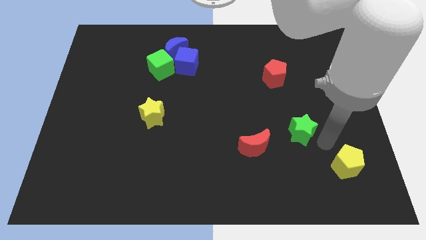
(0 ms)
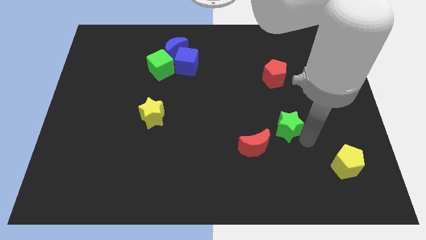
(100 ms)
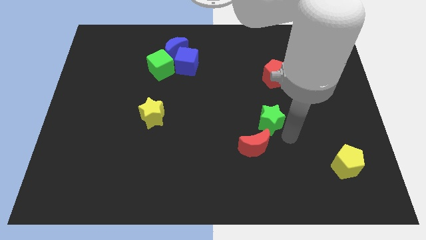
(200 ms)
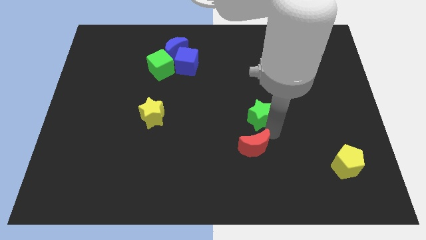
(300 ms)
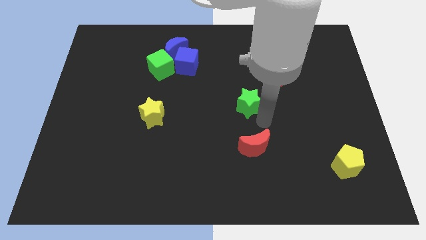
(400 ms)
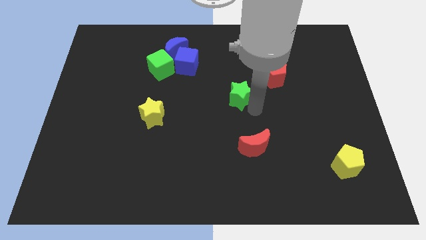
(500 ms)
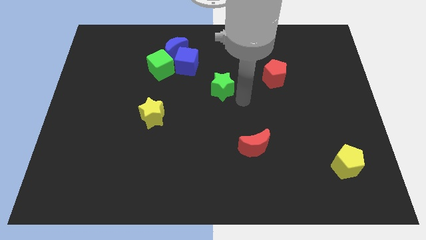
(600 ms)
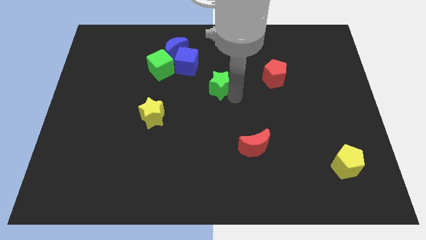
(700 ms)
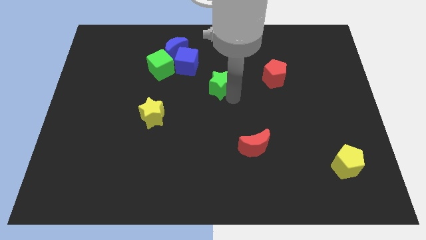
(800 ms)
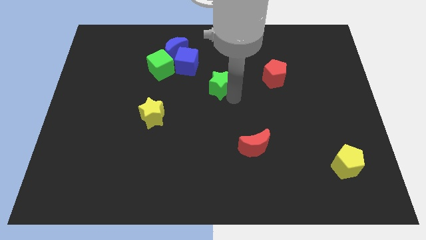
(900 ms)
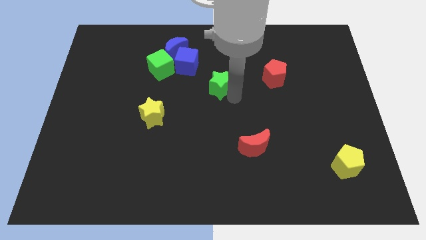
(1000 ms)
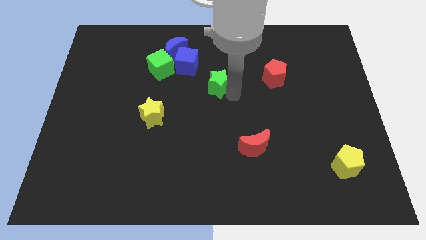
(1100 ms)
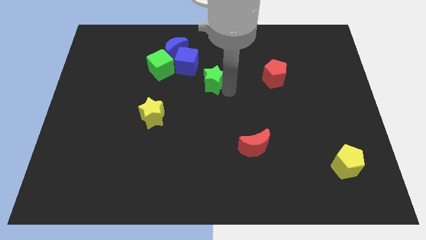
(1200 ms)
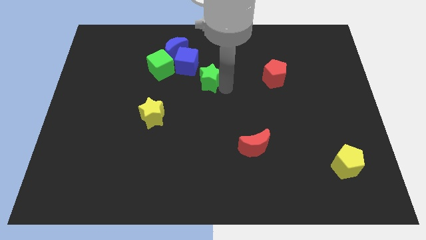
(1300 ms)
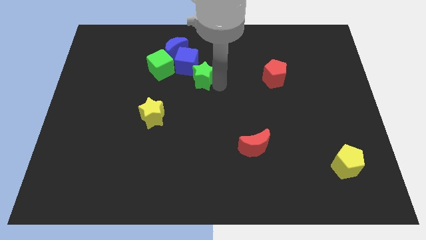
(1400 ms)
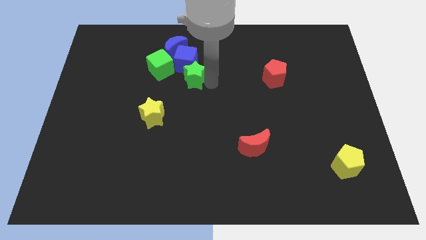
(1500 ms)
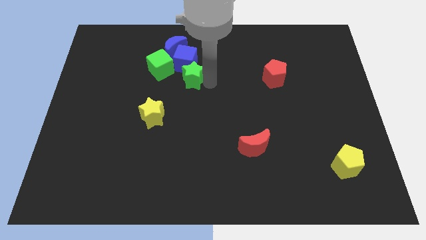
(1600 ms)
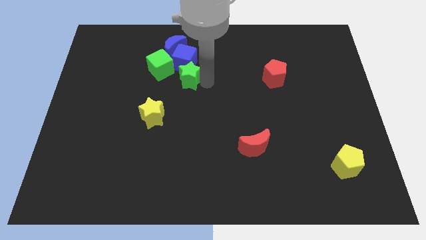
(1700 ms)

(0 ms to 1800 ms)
slide the green star towards the bottom side of the blue cube

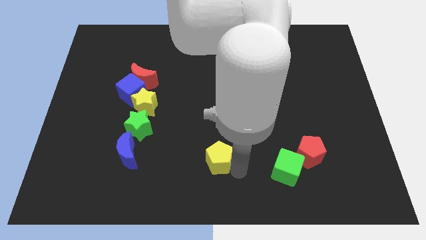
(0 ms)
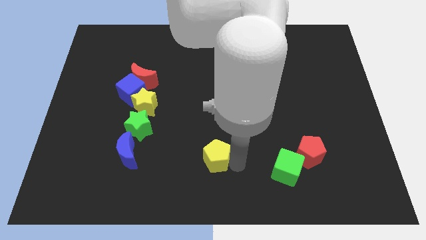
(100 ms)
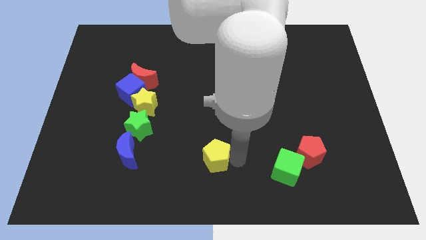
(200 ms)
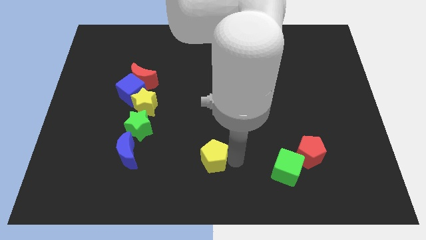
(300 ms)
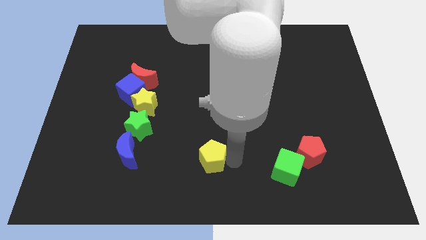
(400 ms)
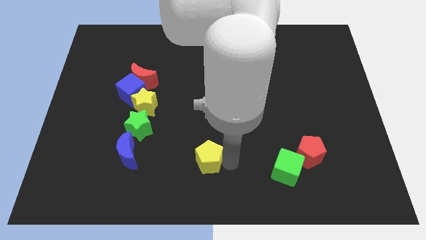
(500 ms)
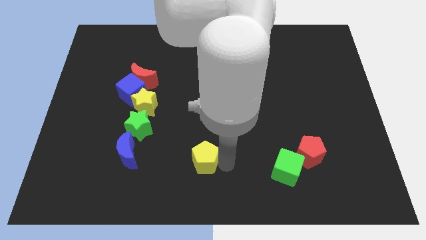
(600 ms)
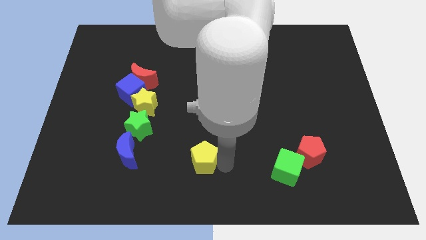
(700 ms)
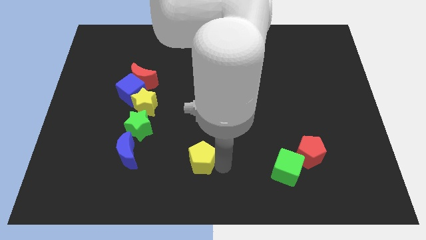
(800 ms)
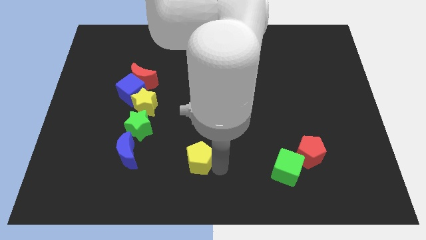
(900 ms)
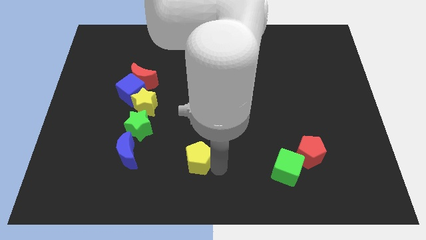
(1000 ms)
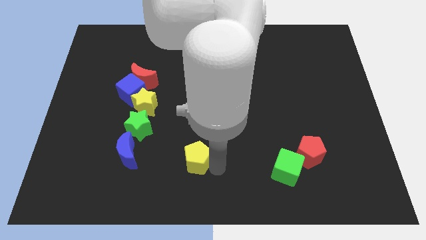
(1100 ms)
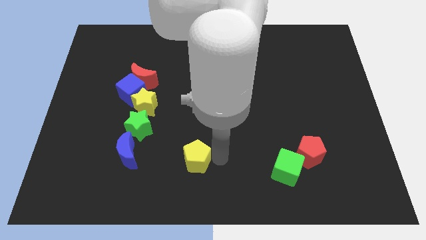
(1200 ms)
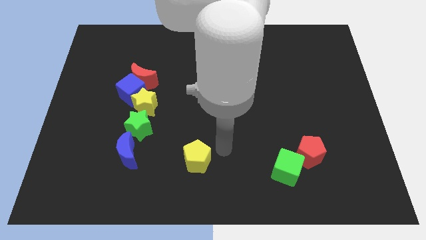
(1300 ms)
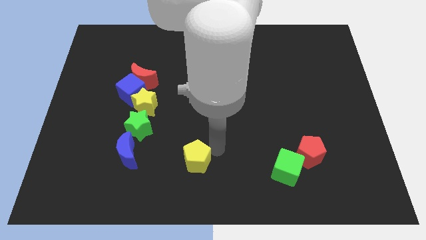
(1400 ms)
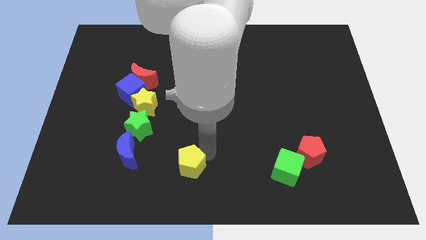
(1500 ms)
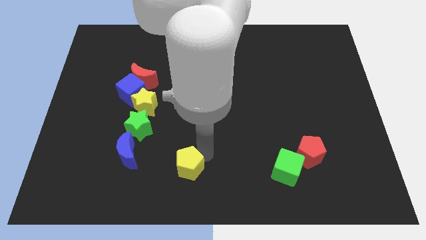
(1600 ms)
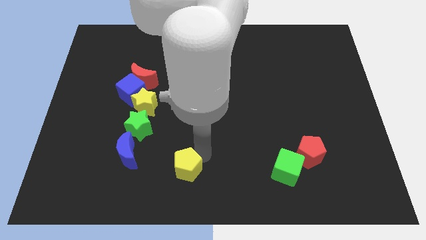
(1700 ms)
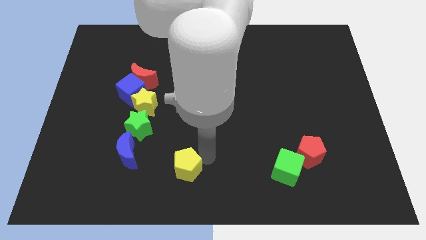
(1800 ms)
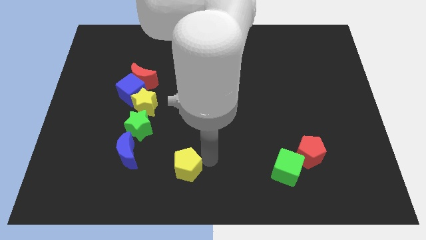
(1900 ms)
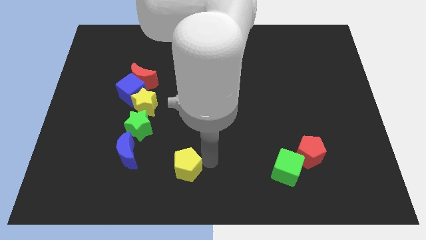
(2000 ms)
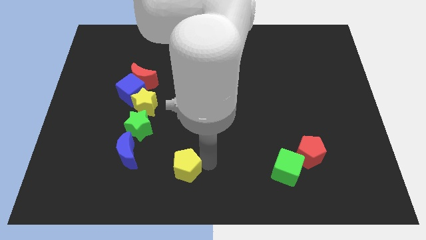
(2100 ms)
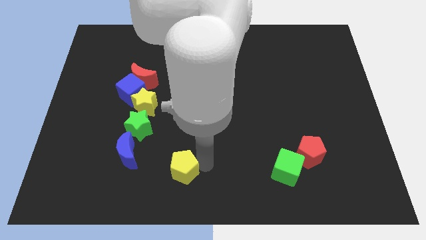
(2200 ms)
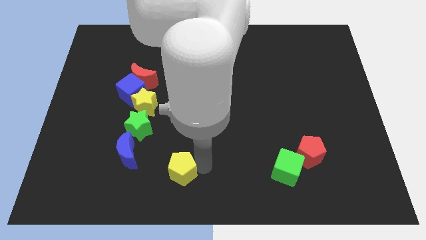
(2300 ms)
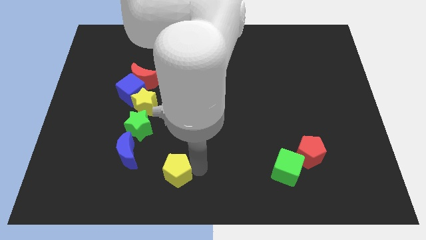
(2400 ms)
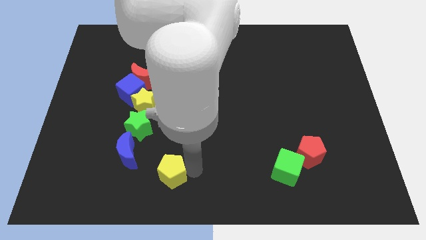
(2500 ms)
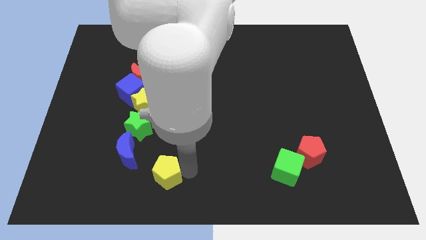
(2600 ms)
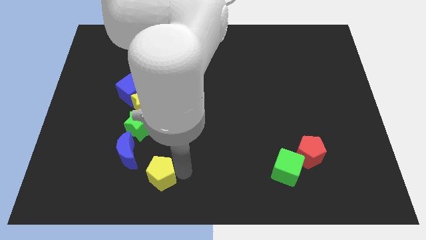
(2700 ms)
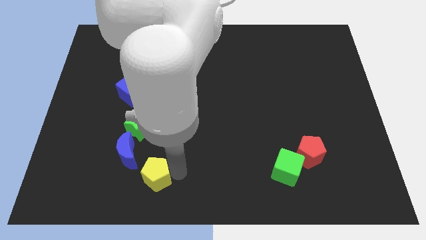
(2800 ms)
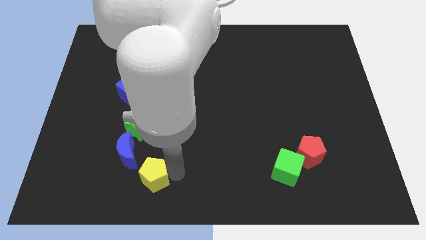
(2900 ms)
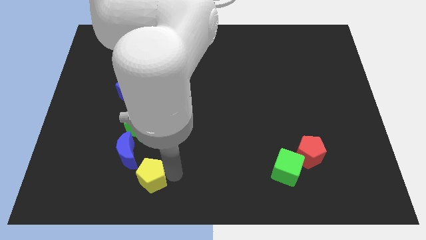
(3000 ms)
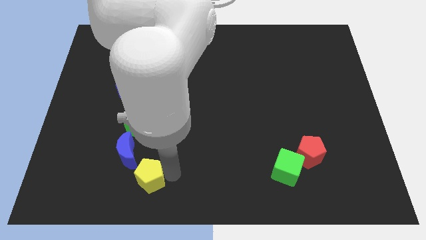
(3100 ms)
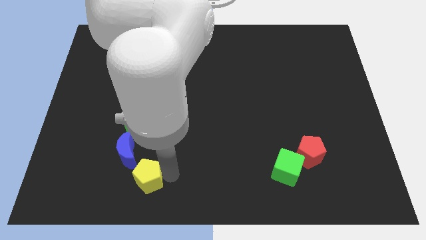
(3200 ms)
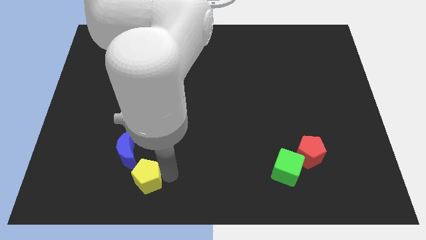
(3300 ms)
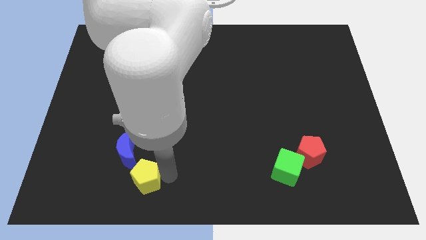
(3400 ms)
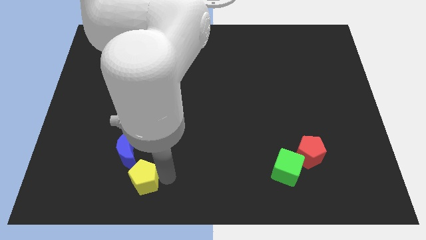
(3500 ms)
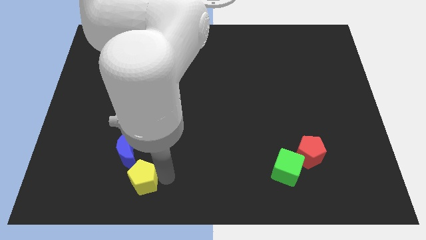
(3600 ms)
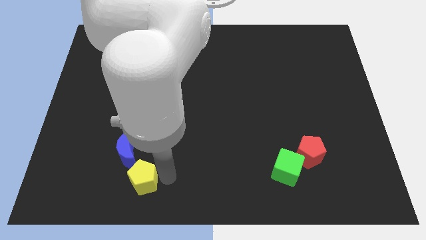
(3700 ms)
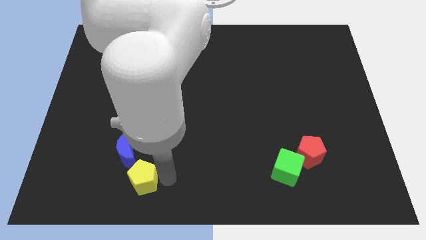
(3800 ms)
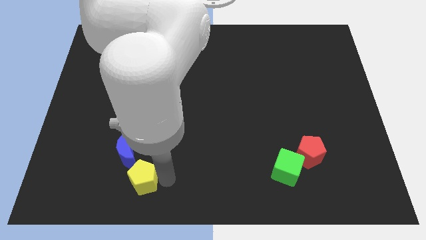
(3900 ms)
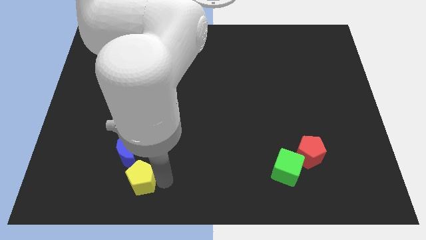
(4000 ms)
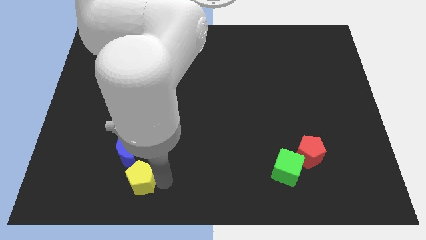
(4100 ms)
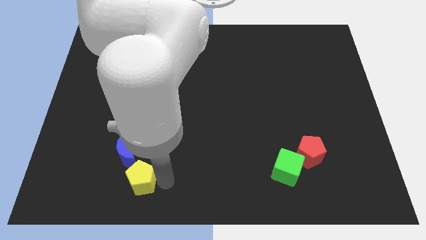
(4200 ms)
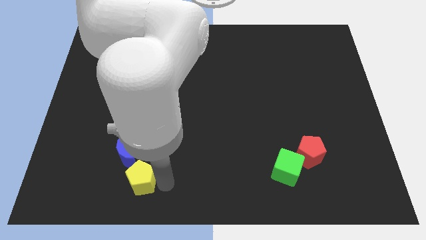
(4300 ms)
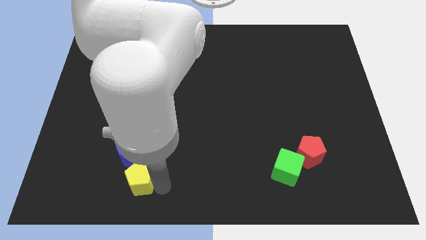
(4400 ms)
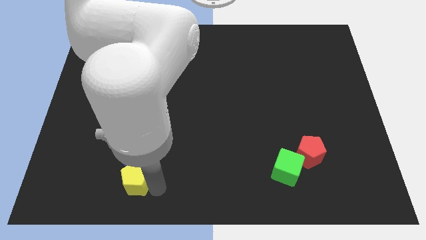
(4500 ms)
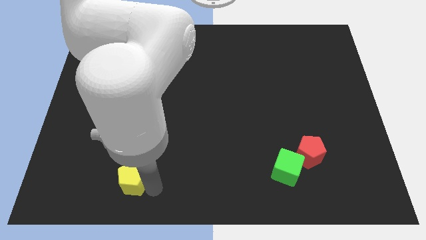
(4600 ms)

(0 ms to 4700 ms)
push the yellow pentagon to the bottom of the blue moon

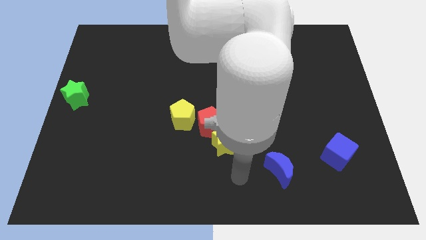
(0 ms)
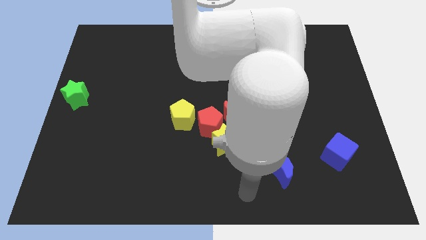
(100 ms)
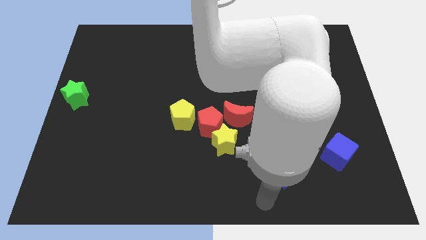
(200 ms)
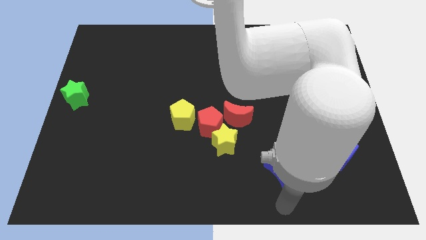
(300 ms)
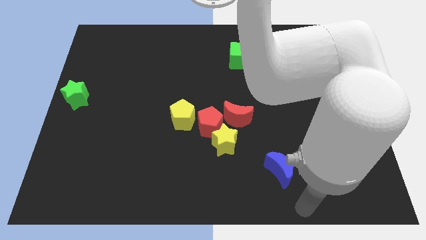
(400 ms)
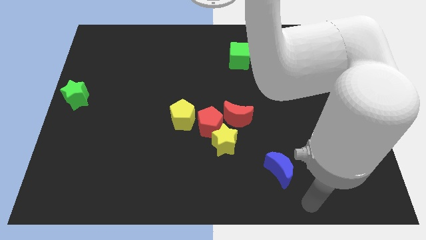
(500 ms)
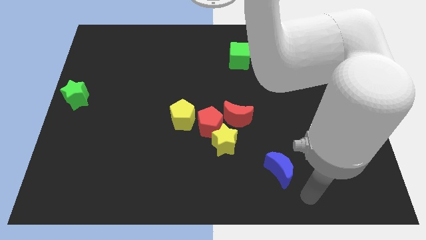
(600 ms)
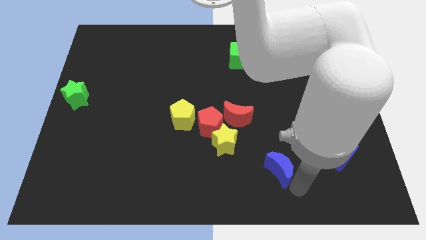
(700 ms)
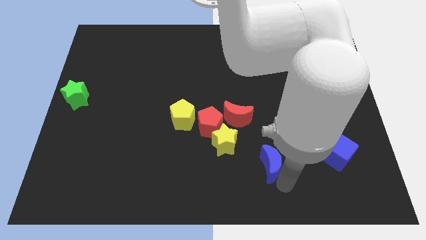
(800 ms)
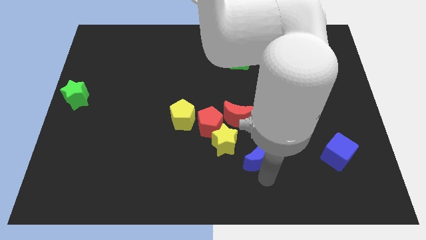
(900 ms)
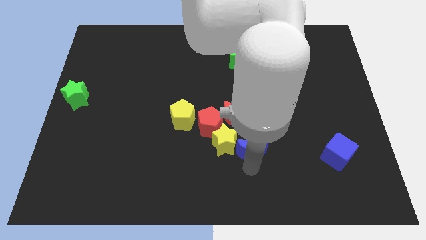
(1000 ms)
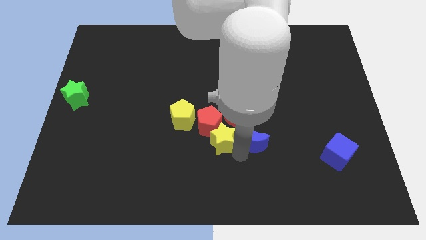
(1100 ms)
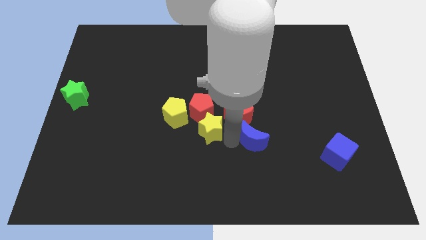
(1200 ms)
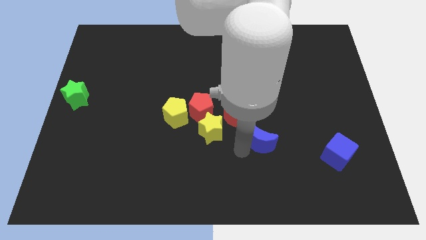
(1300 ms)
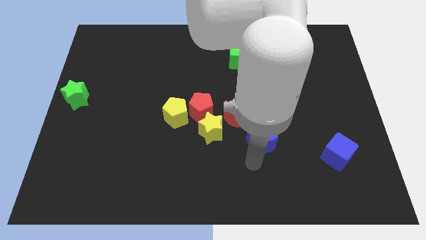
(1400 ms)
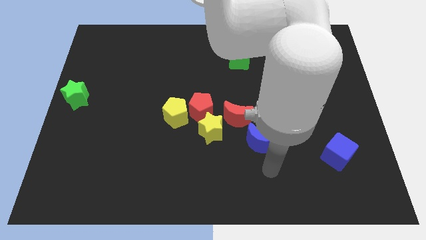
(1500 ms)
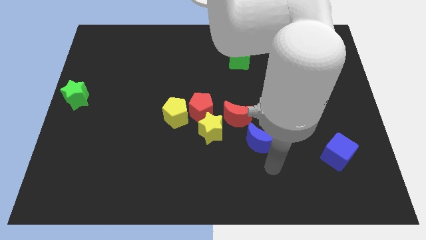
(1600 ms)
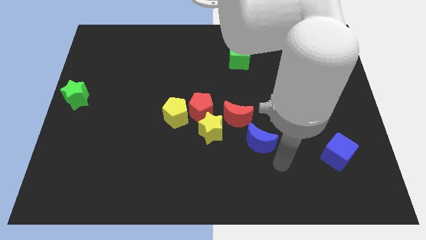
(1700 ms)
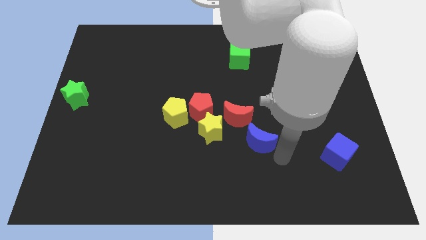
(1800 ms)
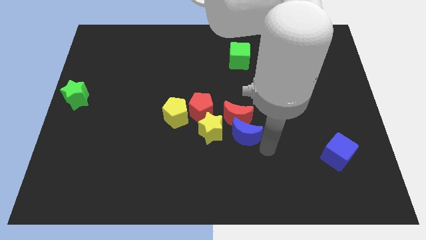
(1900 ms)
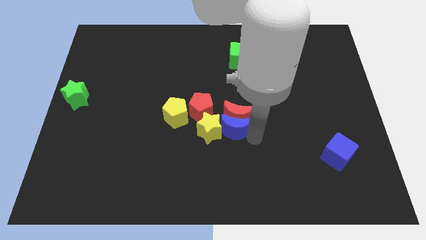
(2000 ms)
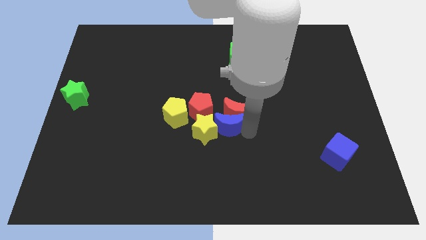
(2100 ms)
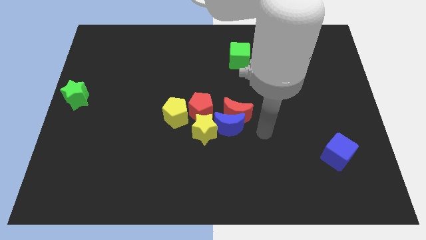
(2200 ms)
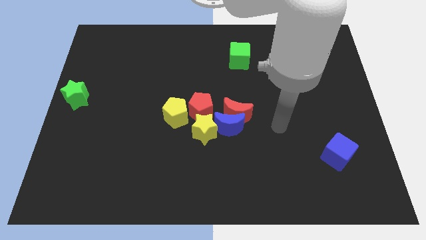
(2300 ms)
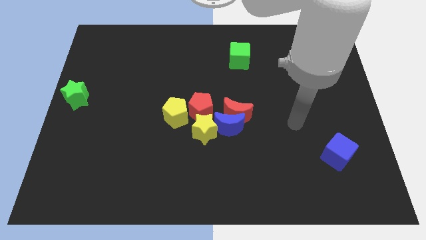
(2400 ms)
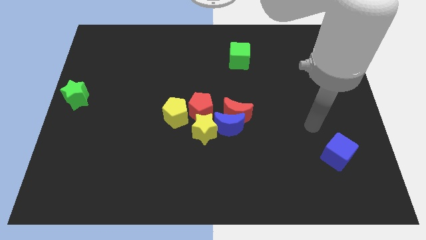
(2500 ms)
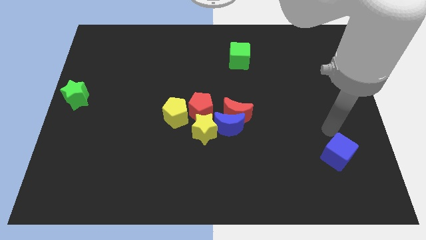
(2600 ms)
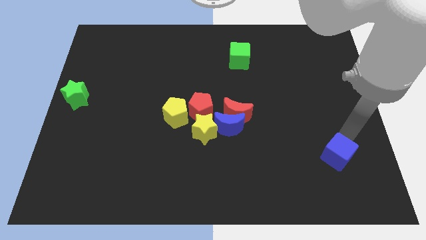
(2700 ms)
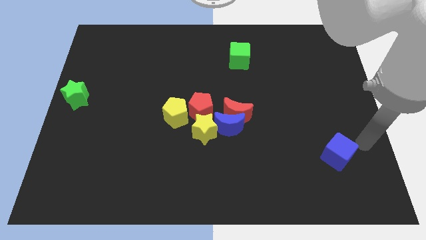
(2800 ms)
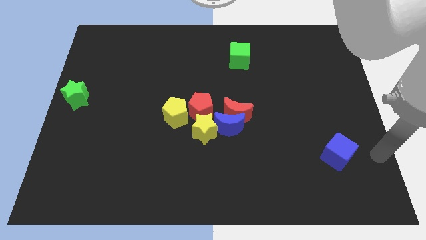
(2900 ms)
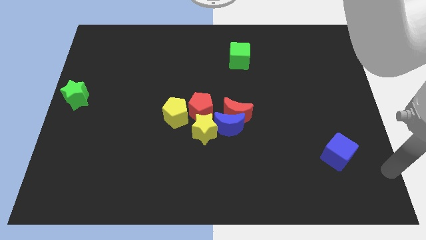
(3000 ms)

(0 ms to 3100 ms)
move the blue moon vertically below the red moon
